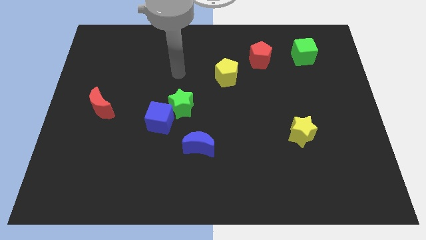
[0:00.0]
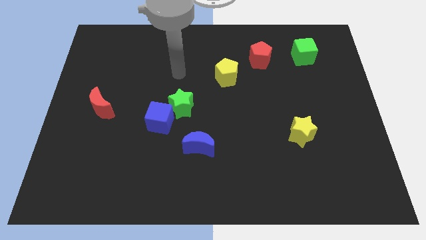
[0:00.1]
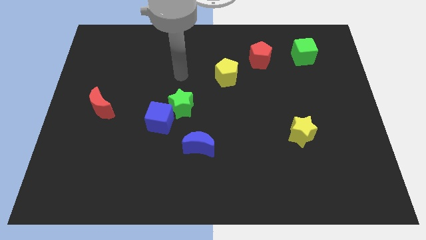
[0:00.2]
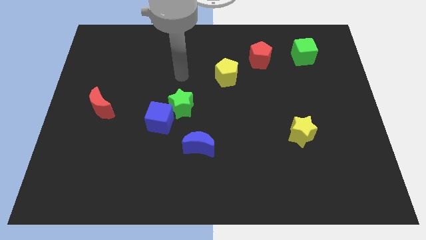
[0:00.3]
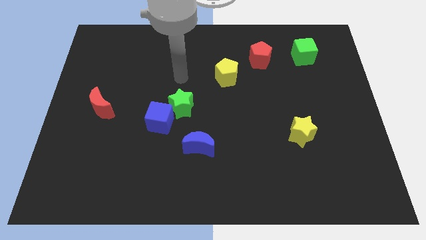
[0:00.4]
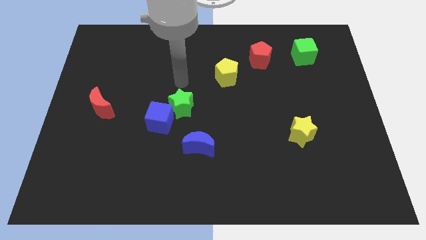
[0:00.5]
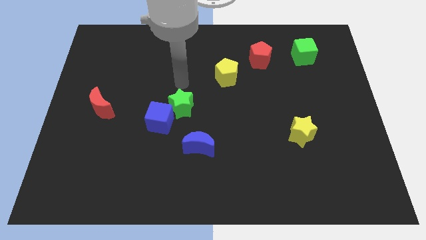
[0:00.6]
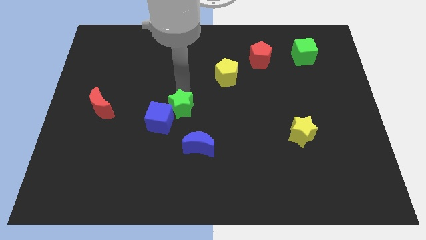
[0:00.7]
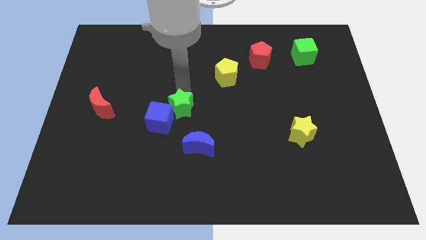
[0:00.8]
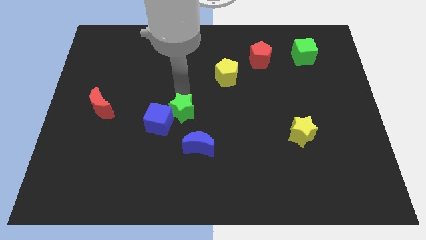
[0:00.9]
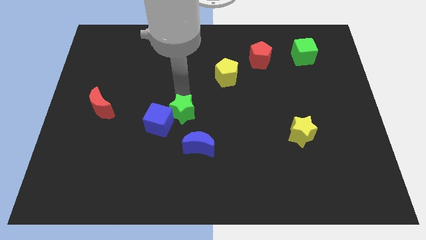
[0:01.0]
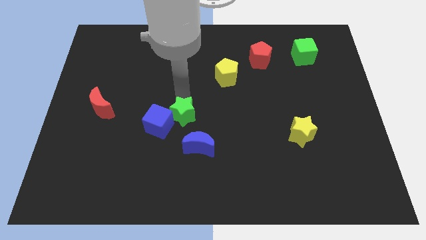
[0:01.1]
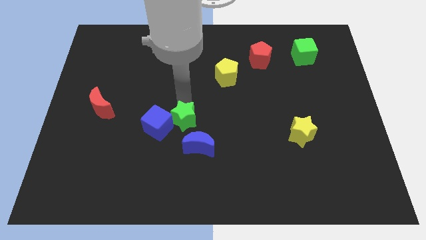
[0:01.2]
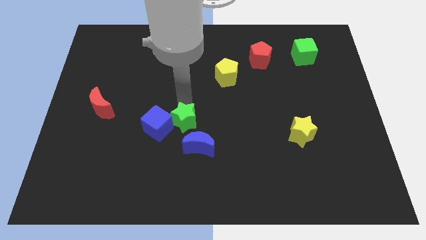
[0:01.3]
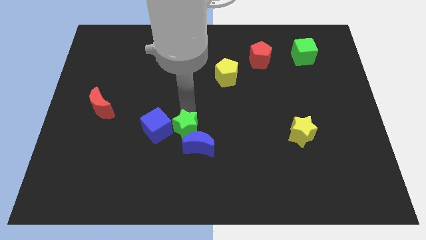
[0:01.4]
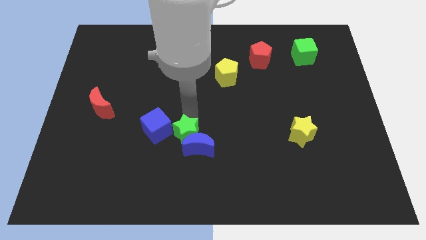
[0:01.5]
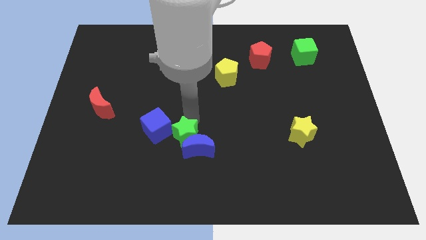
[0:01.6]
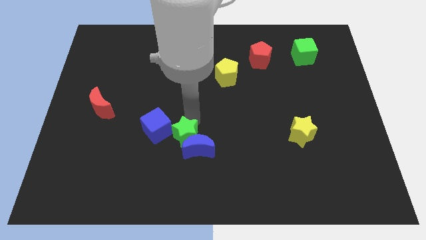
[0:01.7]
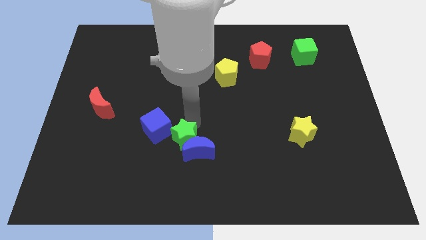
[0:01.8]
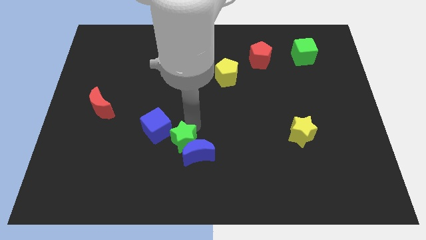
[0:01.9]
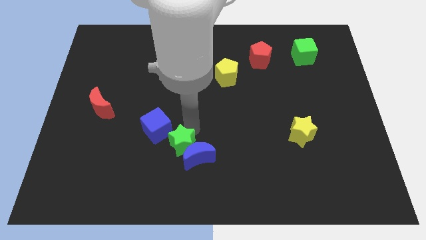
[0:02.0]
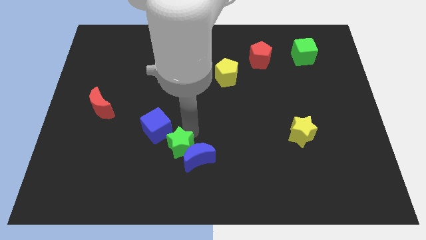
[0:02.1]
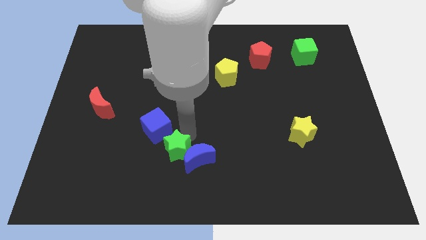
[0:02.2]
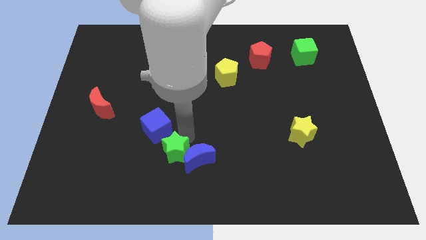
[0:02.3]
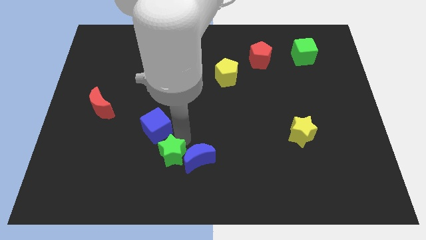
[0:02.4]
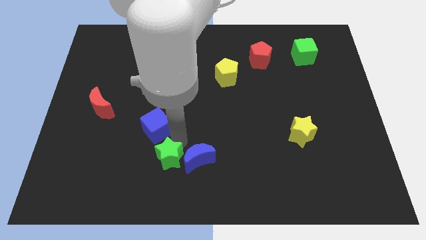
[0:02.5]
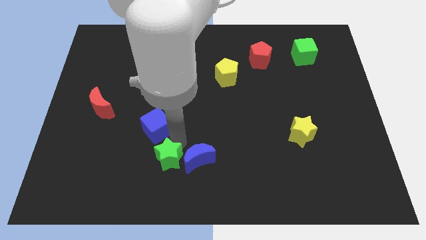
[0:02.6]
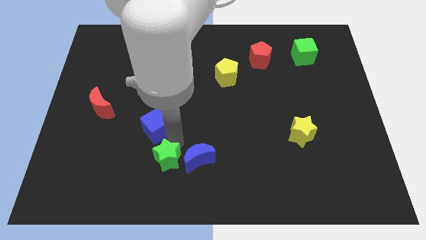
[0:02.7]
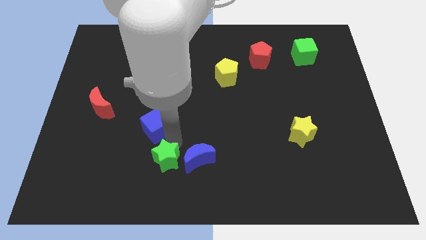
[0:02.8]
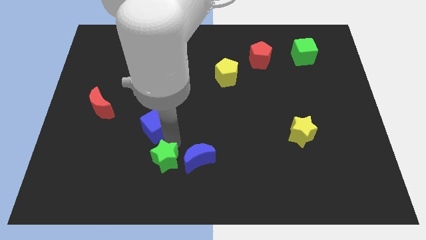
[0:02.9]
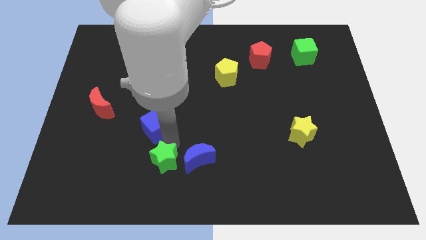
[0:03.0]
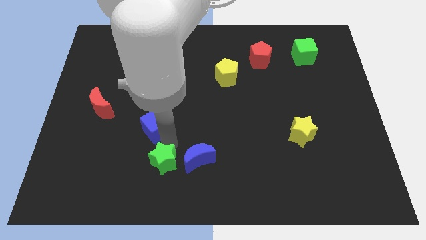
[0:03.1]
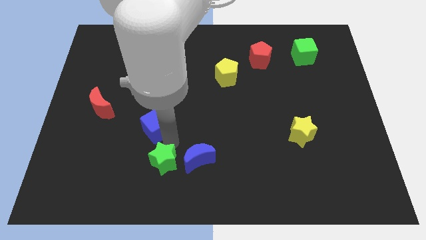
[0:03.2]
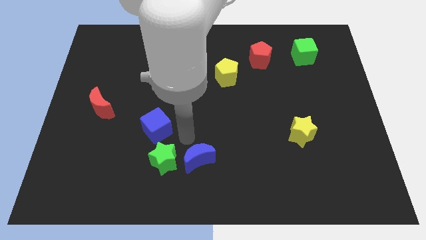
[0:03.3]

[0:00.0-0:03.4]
push the green star slightly downwards

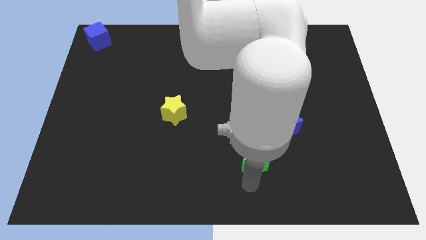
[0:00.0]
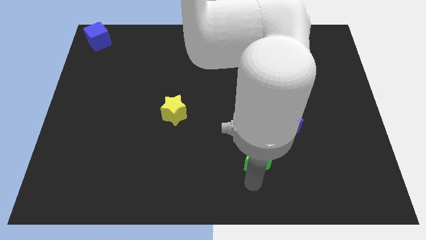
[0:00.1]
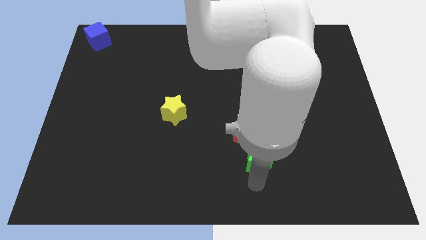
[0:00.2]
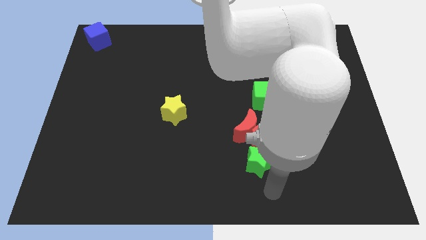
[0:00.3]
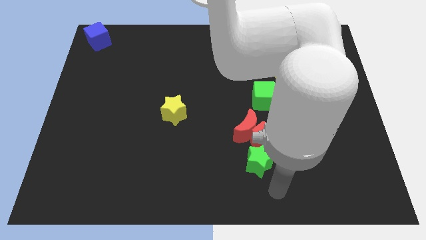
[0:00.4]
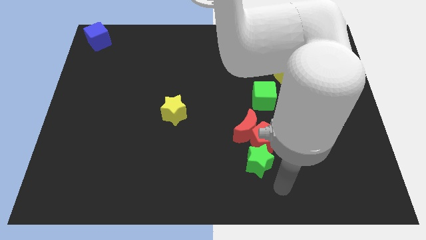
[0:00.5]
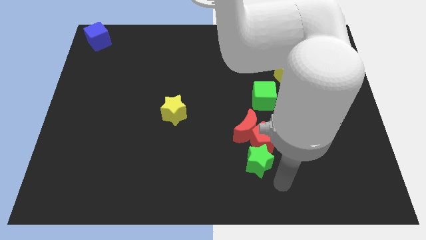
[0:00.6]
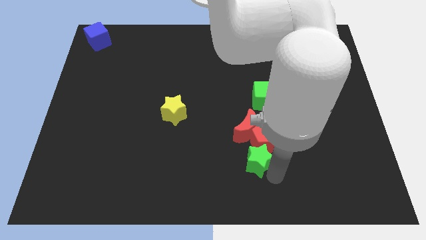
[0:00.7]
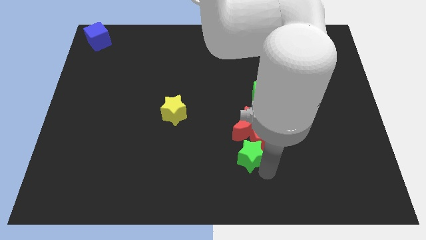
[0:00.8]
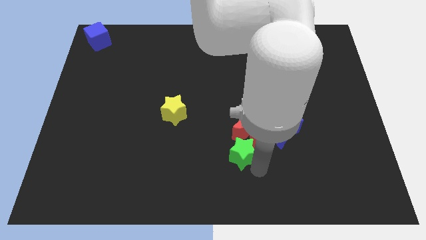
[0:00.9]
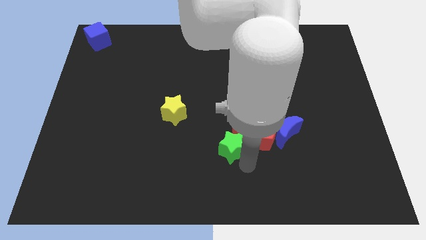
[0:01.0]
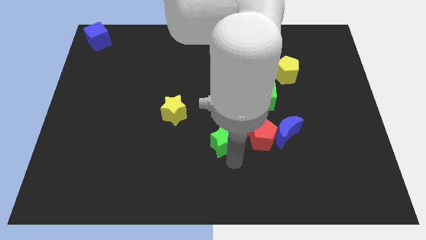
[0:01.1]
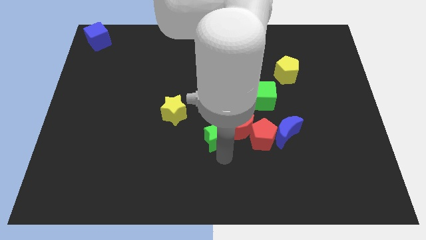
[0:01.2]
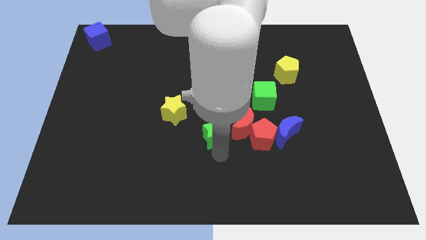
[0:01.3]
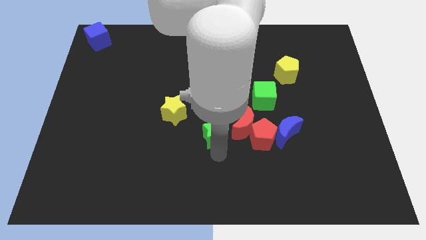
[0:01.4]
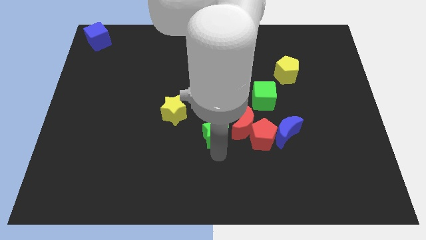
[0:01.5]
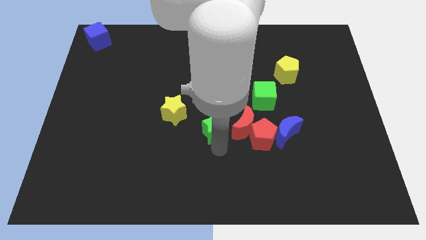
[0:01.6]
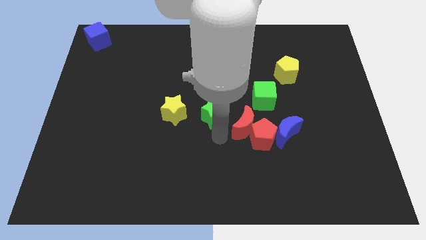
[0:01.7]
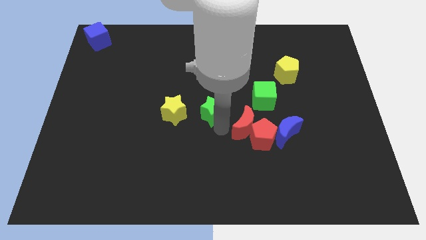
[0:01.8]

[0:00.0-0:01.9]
move the green star right to the yellow star

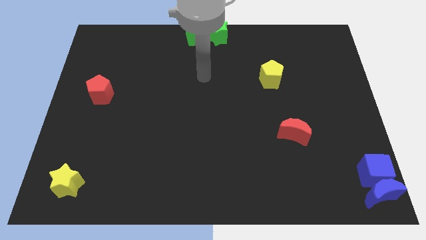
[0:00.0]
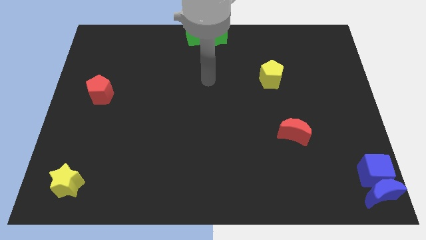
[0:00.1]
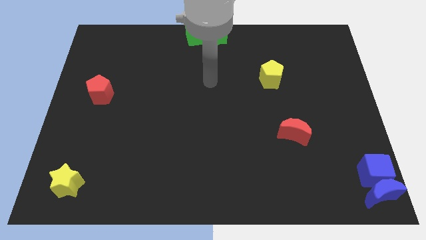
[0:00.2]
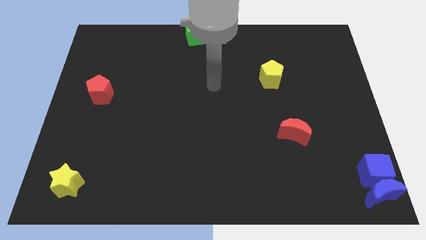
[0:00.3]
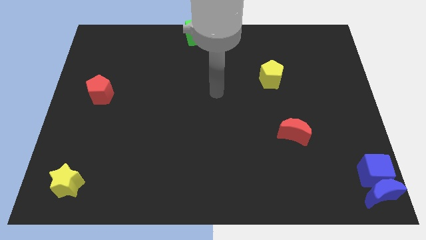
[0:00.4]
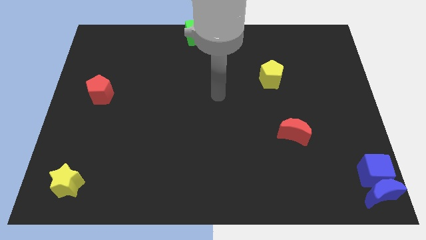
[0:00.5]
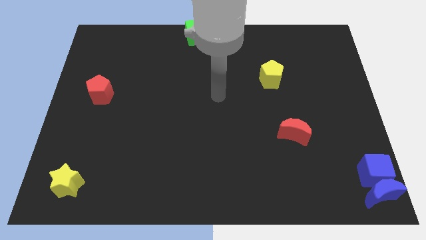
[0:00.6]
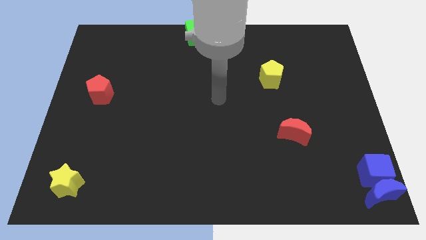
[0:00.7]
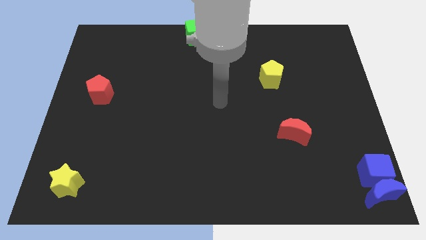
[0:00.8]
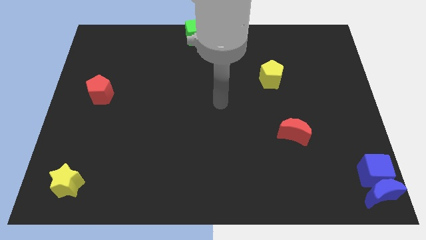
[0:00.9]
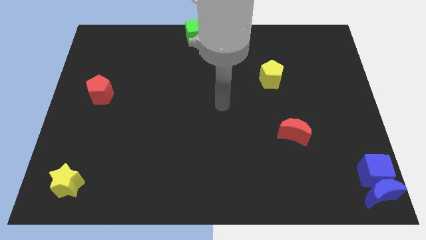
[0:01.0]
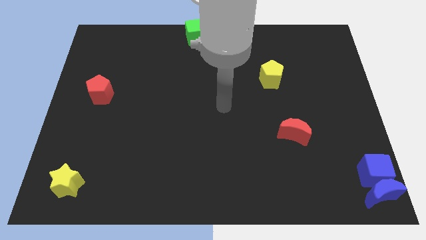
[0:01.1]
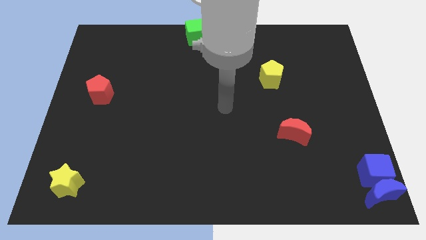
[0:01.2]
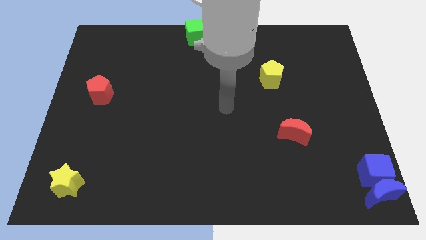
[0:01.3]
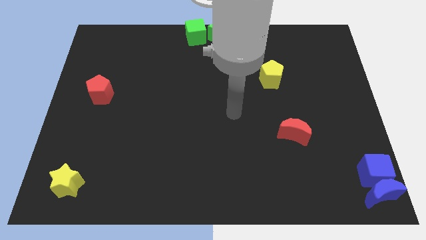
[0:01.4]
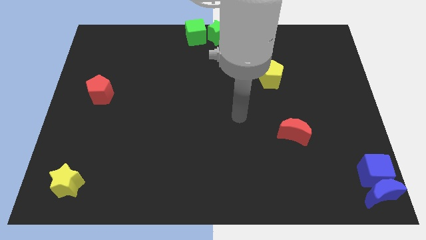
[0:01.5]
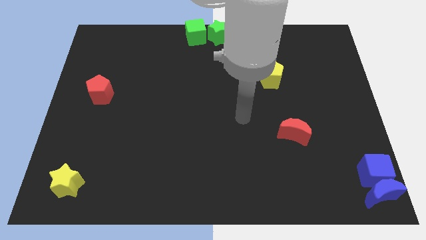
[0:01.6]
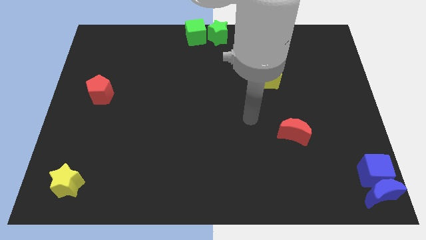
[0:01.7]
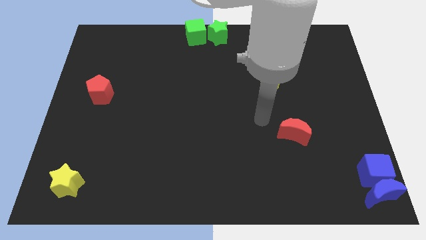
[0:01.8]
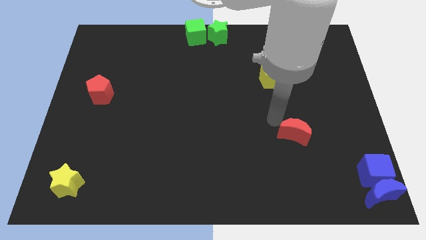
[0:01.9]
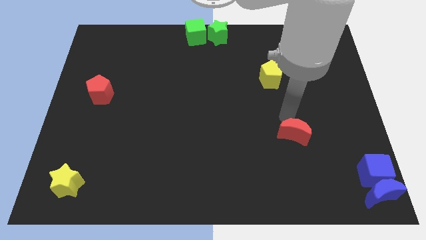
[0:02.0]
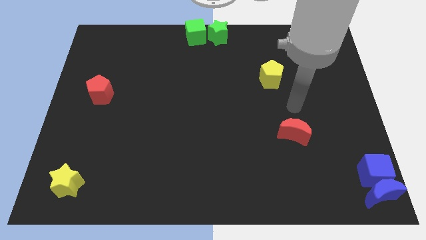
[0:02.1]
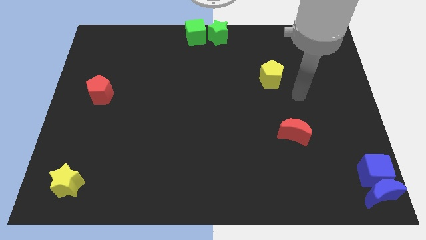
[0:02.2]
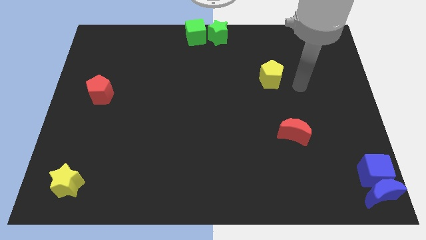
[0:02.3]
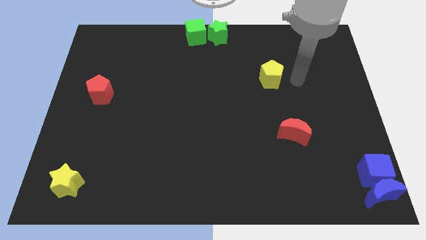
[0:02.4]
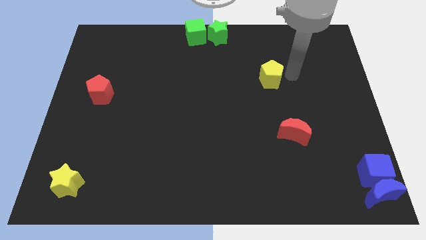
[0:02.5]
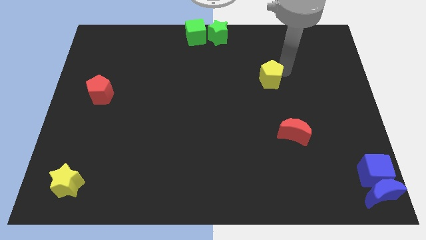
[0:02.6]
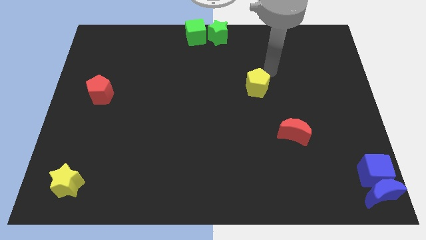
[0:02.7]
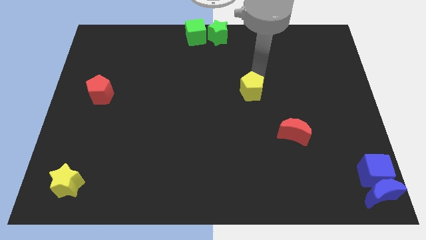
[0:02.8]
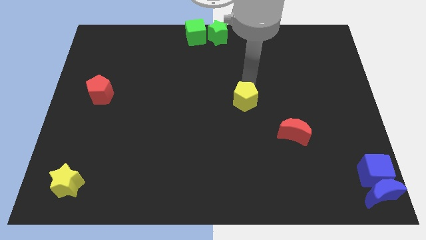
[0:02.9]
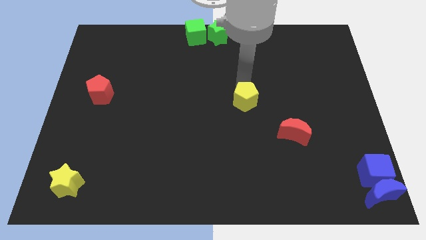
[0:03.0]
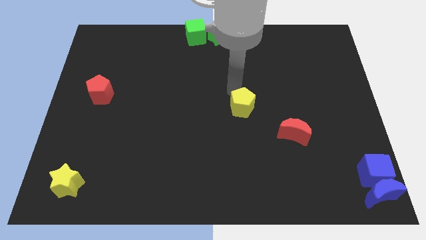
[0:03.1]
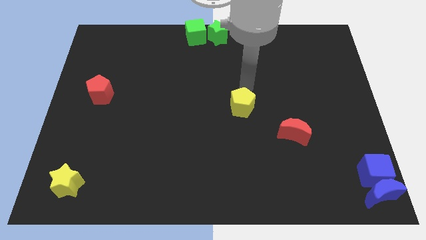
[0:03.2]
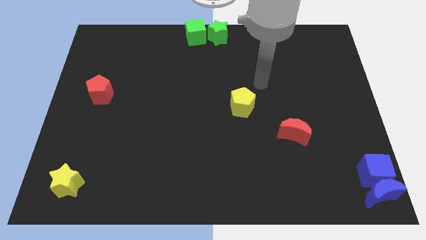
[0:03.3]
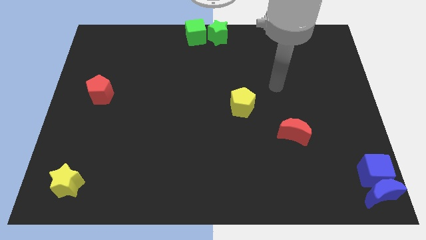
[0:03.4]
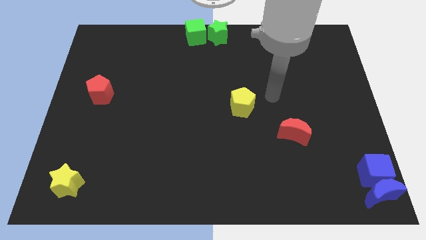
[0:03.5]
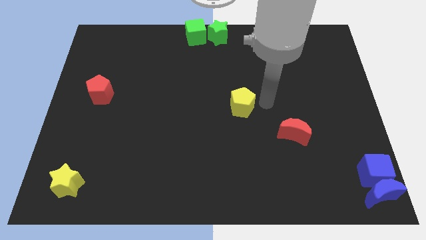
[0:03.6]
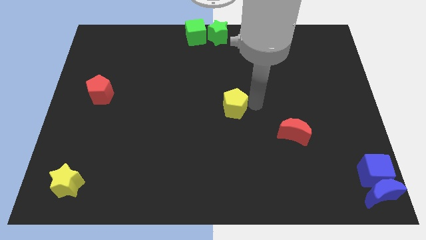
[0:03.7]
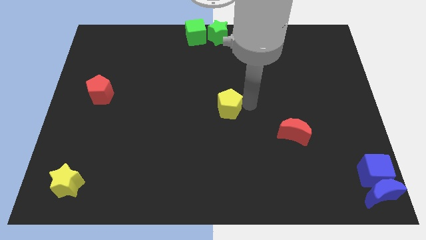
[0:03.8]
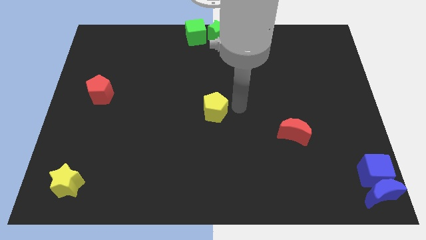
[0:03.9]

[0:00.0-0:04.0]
push the yellow pentagon to the center of the board
